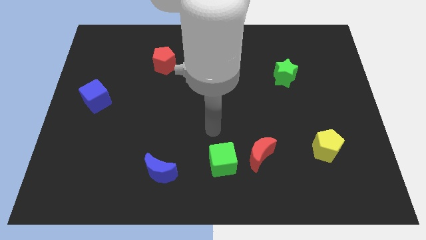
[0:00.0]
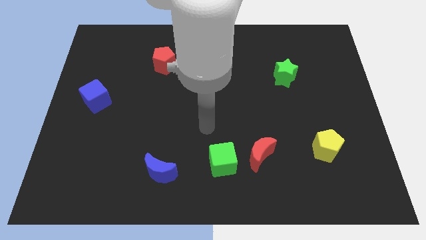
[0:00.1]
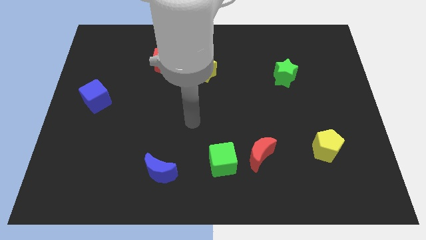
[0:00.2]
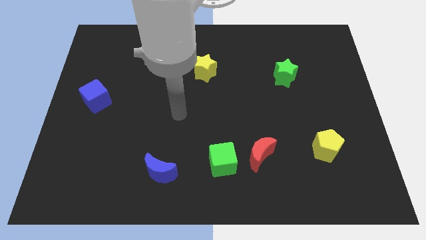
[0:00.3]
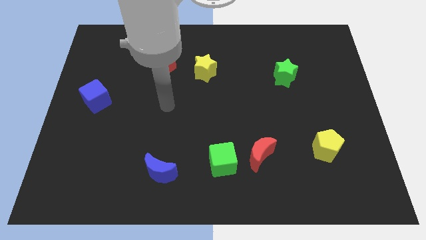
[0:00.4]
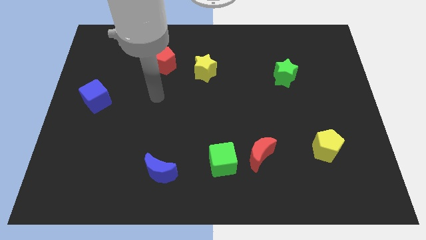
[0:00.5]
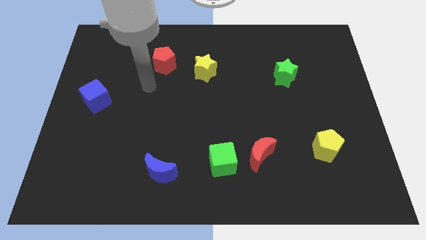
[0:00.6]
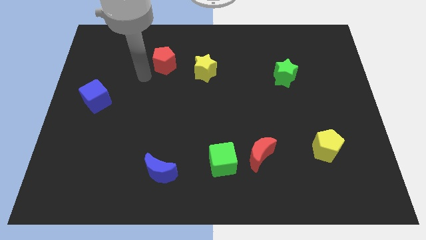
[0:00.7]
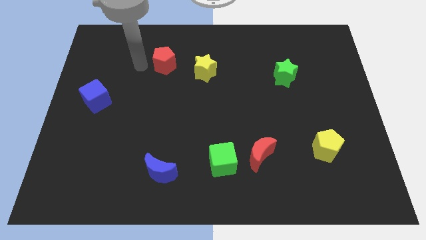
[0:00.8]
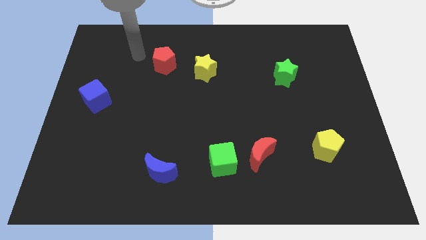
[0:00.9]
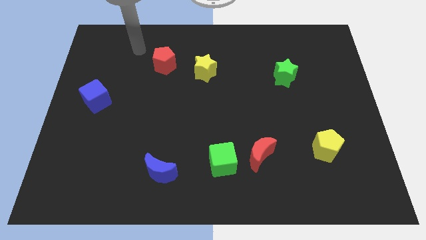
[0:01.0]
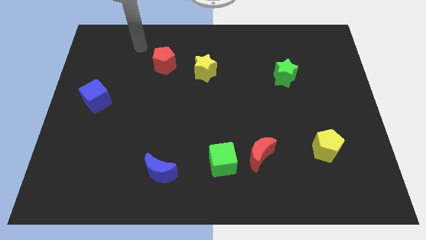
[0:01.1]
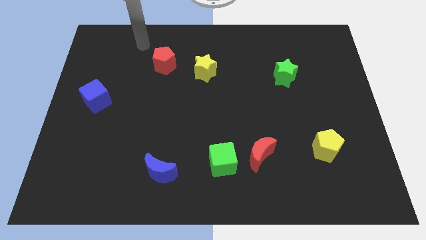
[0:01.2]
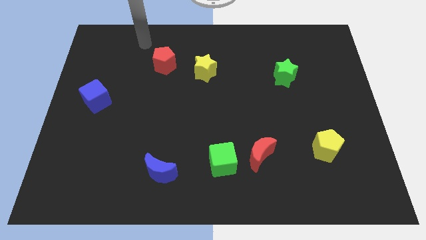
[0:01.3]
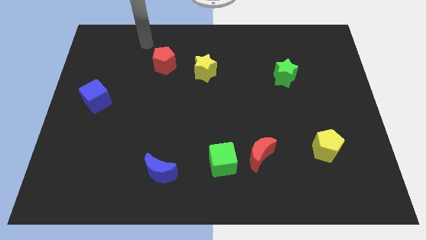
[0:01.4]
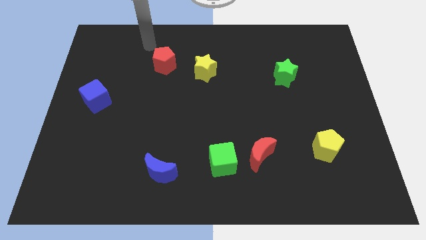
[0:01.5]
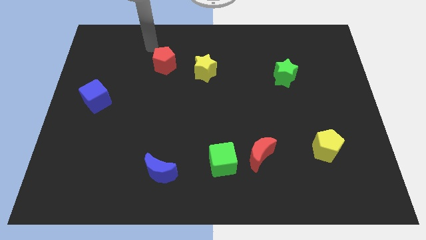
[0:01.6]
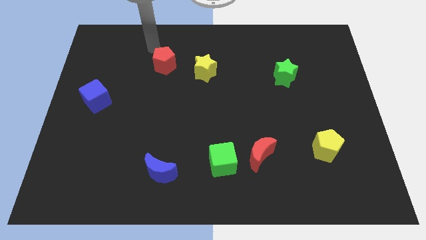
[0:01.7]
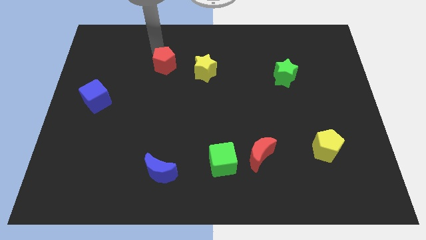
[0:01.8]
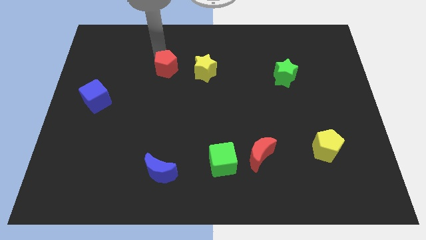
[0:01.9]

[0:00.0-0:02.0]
move your arm towards the red pentagon

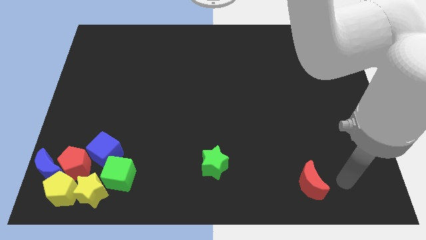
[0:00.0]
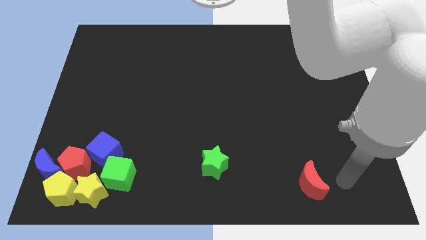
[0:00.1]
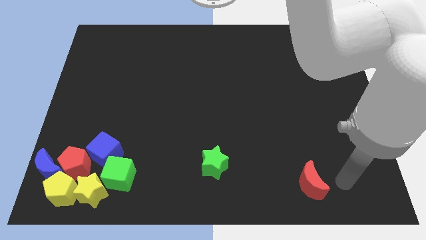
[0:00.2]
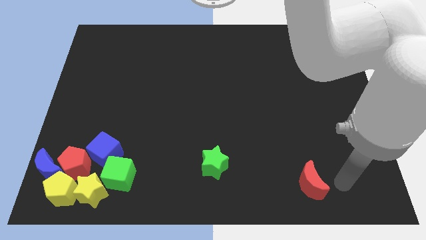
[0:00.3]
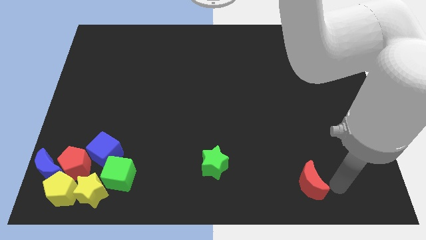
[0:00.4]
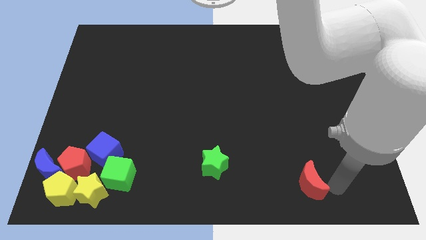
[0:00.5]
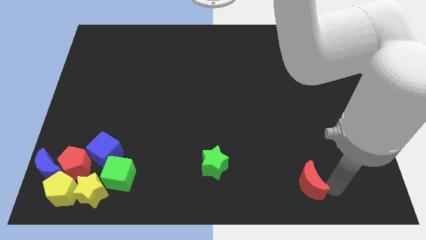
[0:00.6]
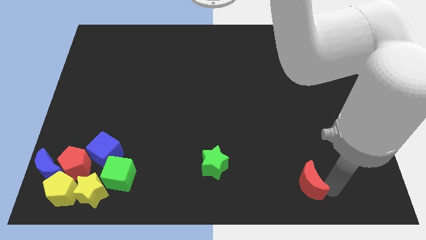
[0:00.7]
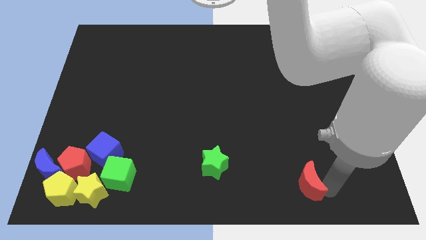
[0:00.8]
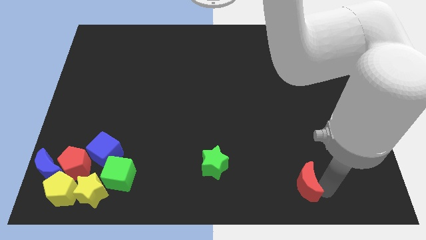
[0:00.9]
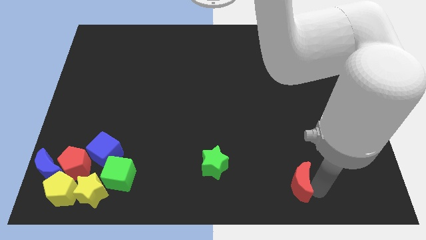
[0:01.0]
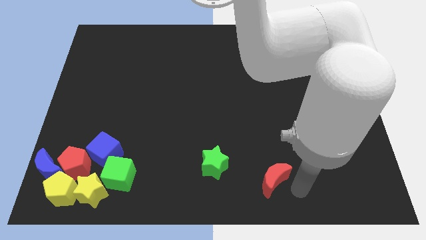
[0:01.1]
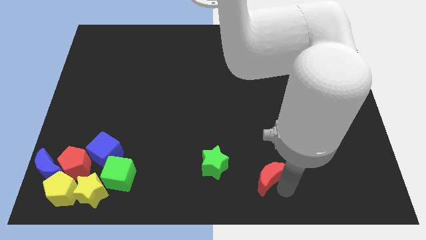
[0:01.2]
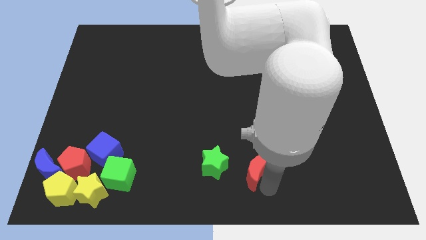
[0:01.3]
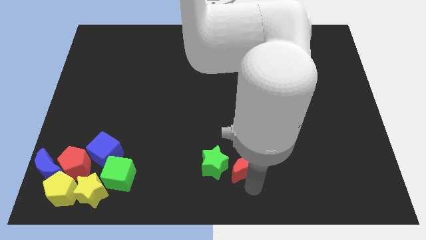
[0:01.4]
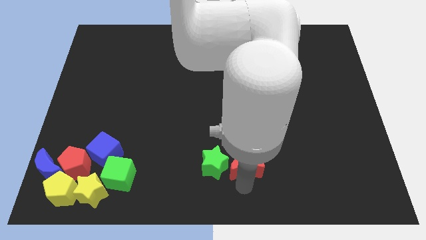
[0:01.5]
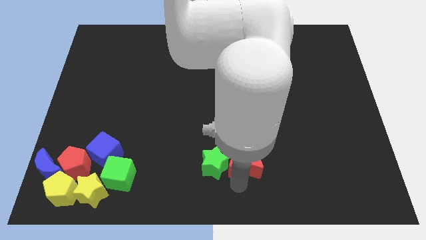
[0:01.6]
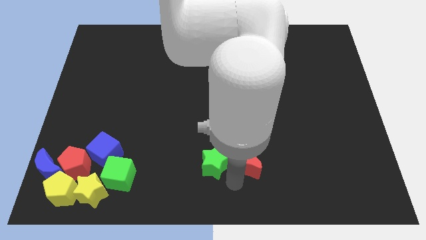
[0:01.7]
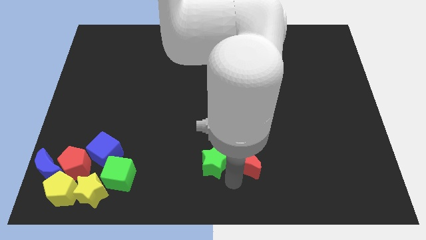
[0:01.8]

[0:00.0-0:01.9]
move the red moon close to the green star

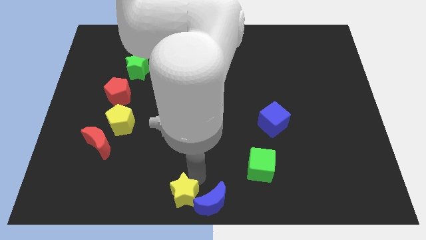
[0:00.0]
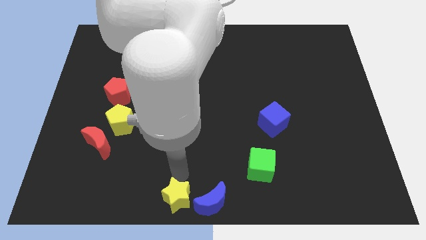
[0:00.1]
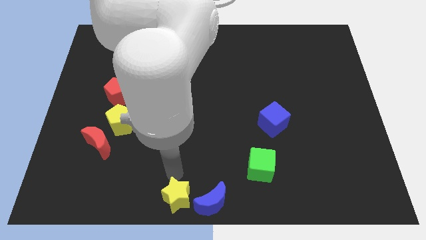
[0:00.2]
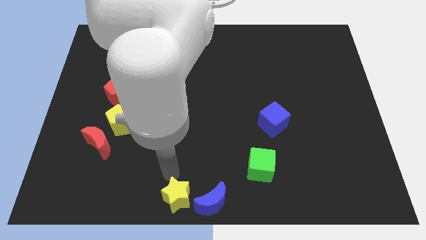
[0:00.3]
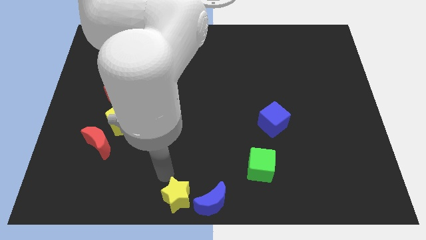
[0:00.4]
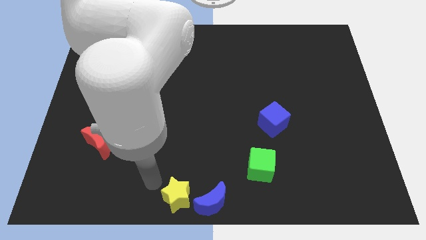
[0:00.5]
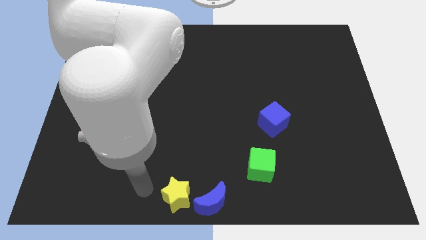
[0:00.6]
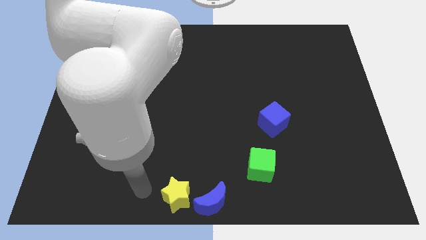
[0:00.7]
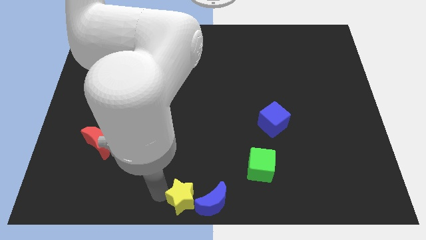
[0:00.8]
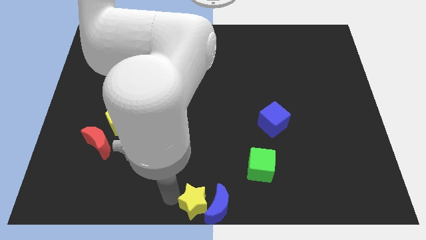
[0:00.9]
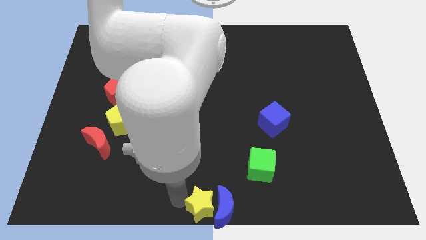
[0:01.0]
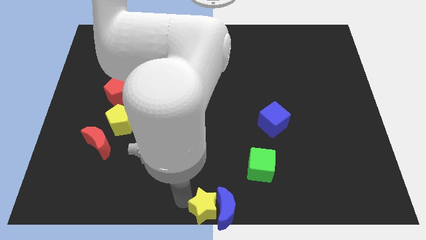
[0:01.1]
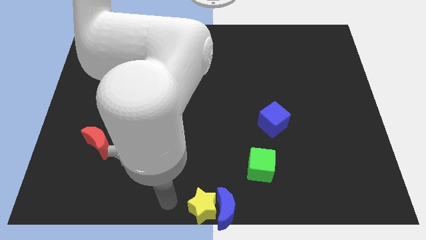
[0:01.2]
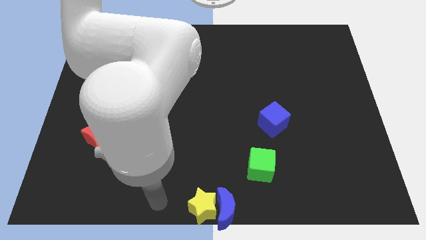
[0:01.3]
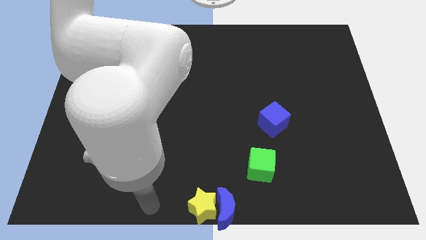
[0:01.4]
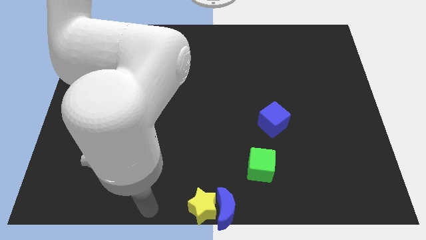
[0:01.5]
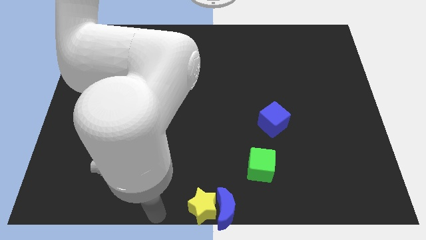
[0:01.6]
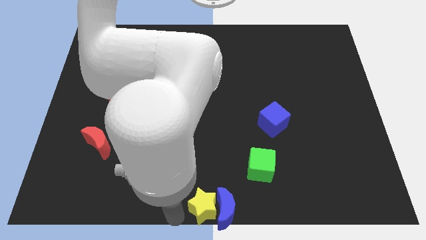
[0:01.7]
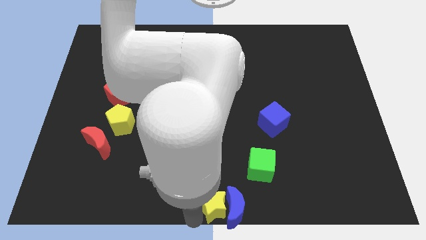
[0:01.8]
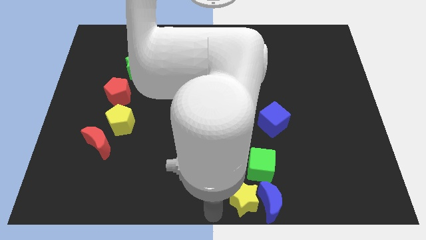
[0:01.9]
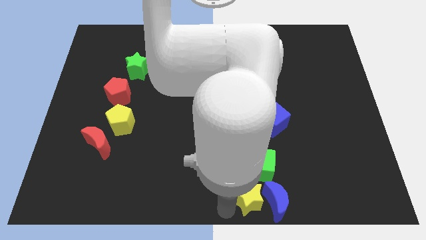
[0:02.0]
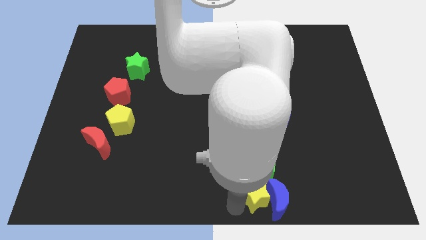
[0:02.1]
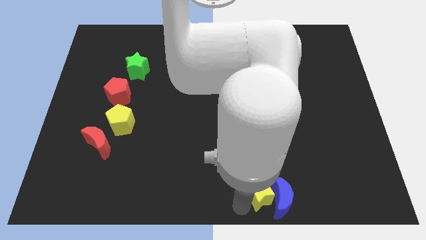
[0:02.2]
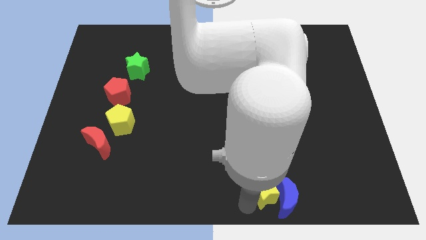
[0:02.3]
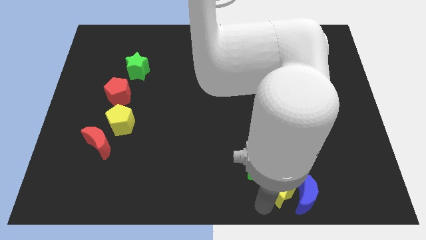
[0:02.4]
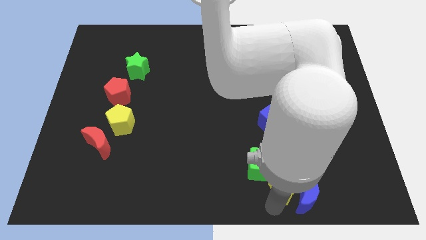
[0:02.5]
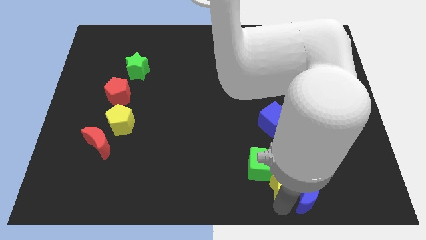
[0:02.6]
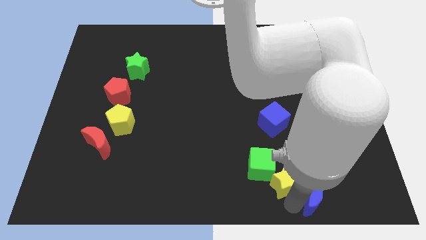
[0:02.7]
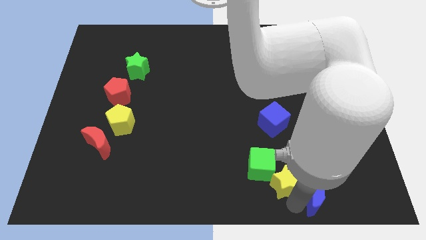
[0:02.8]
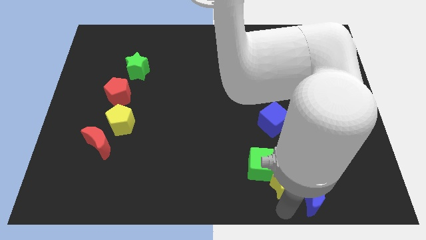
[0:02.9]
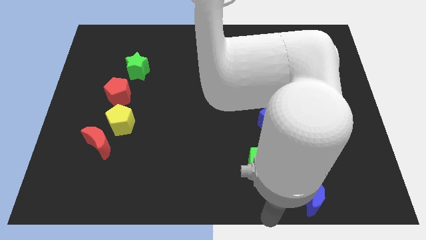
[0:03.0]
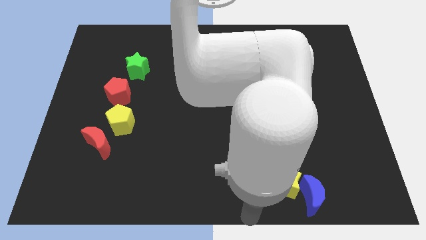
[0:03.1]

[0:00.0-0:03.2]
put the yellow star an dthe blue moon to the bottom right of the green cube

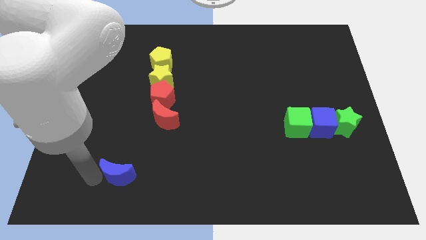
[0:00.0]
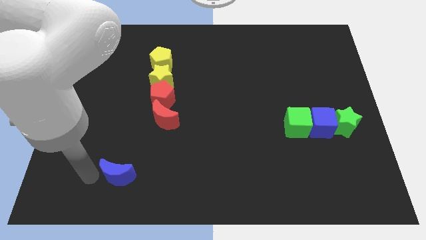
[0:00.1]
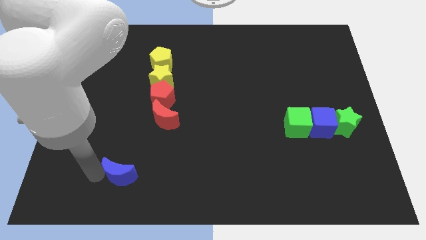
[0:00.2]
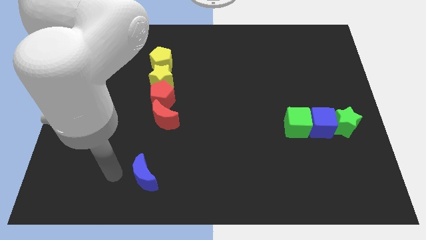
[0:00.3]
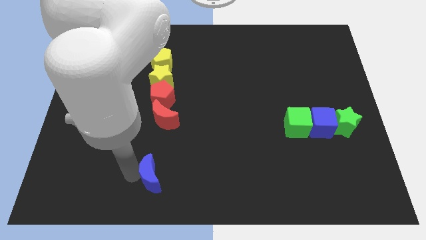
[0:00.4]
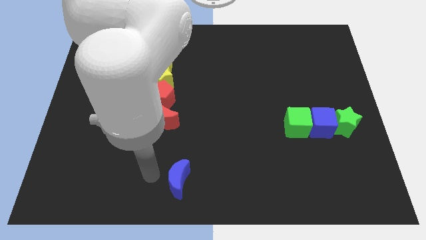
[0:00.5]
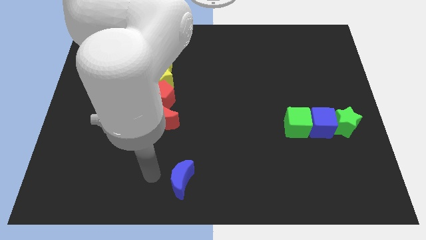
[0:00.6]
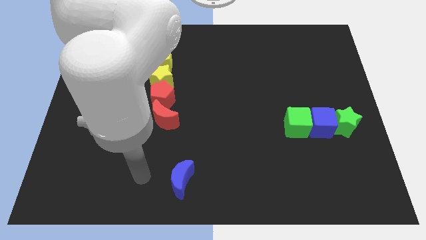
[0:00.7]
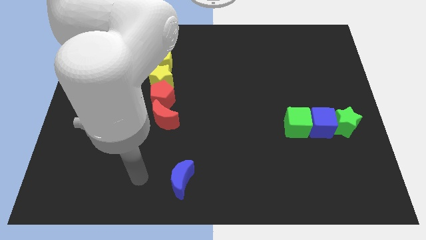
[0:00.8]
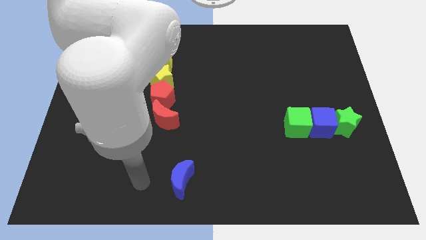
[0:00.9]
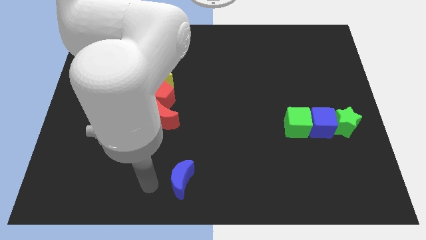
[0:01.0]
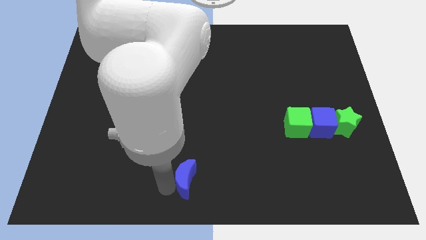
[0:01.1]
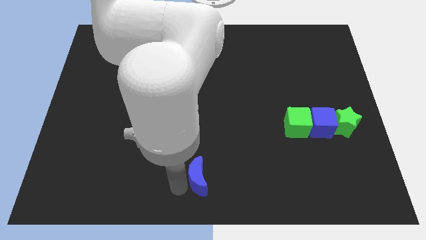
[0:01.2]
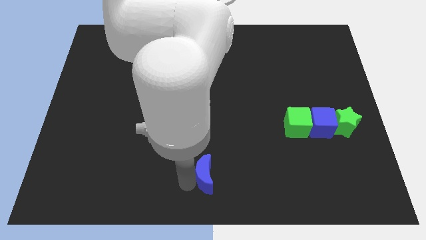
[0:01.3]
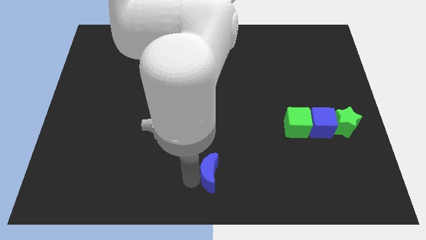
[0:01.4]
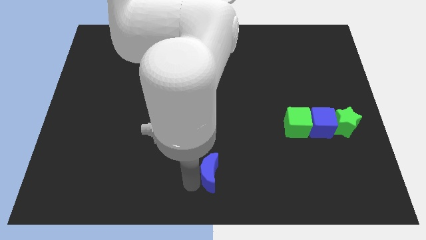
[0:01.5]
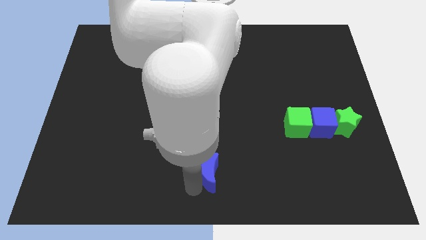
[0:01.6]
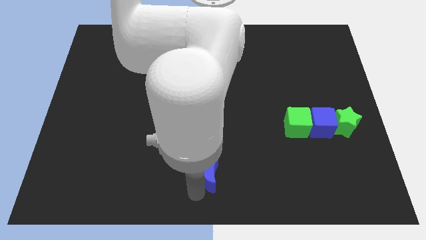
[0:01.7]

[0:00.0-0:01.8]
place the blue semicircle at the bottom center of the board

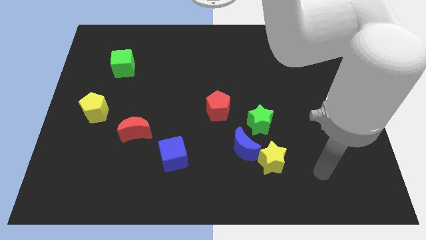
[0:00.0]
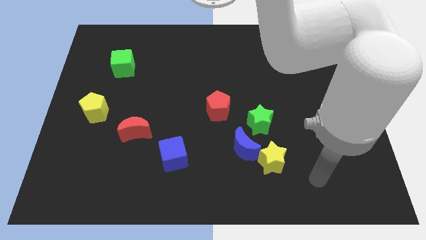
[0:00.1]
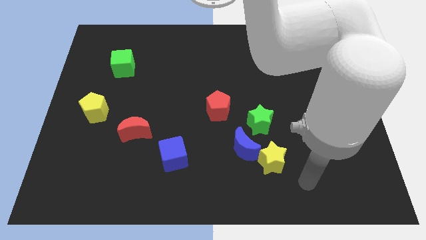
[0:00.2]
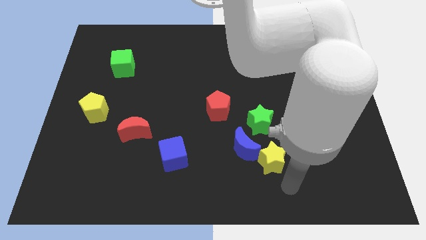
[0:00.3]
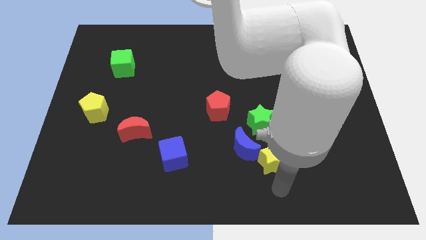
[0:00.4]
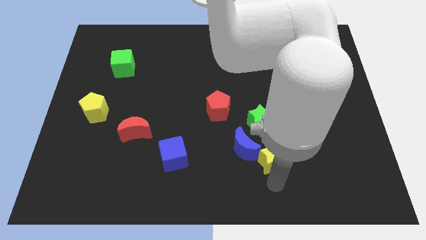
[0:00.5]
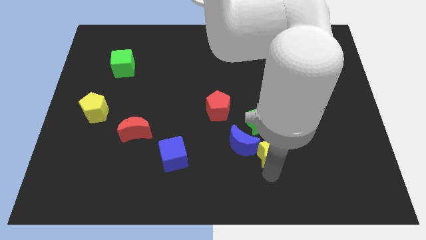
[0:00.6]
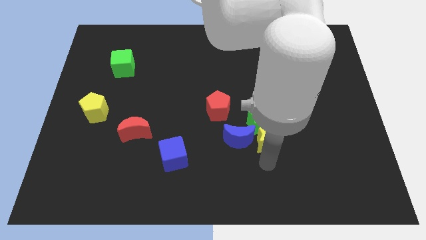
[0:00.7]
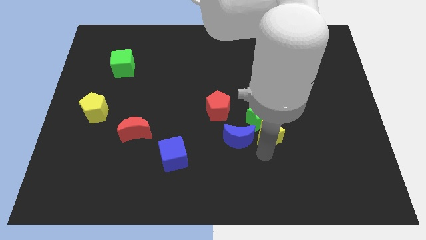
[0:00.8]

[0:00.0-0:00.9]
move the yellow star below the green star
